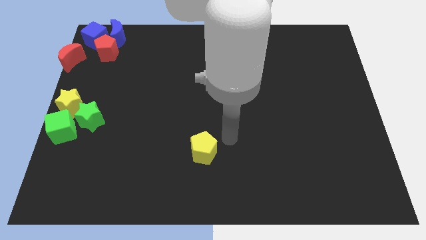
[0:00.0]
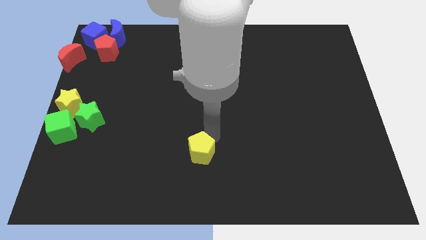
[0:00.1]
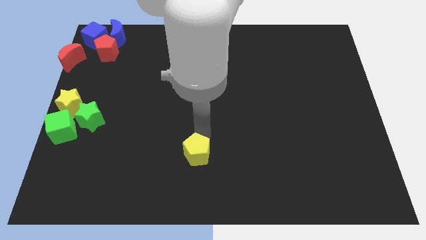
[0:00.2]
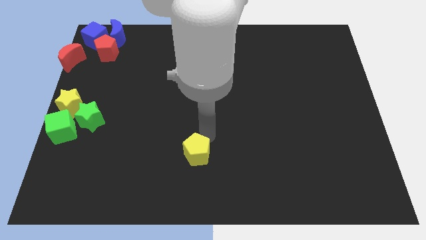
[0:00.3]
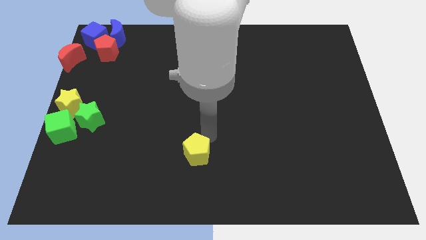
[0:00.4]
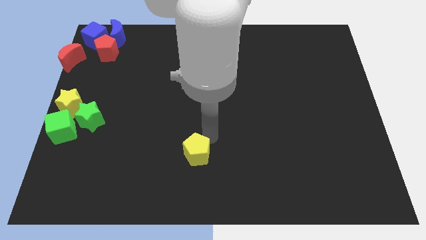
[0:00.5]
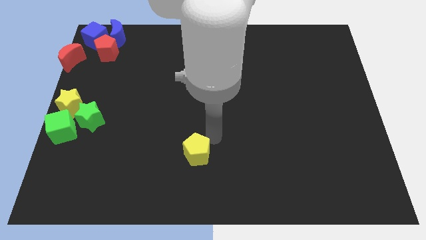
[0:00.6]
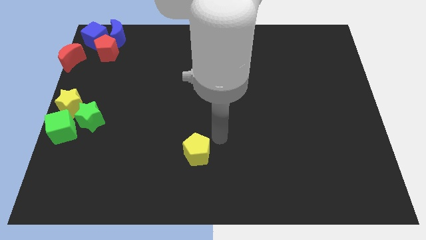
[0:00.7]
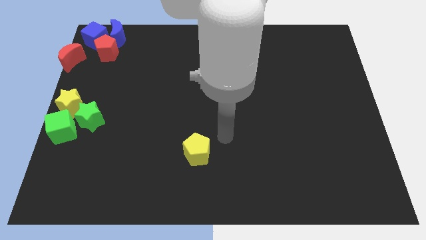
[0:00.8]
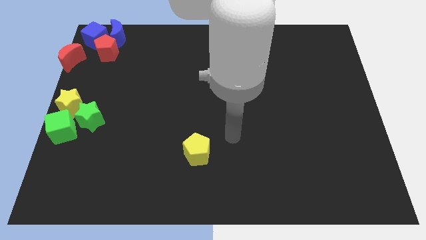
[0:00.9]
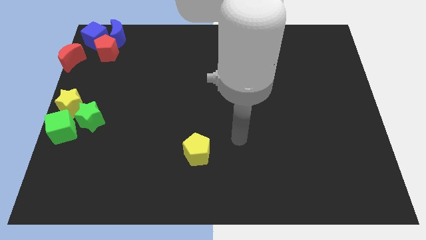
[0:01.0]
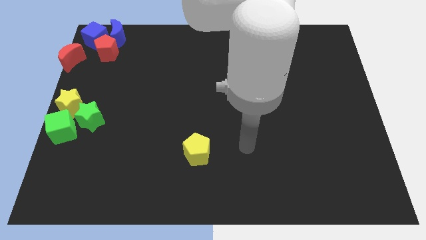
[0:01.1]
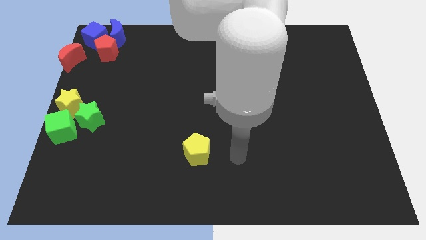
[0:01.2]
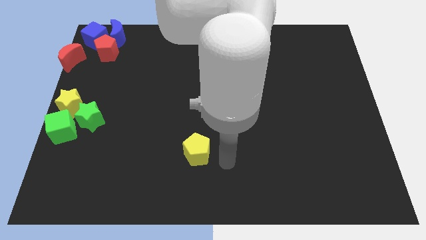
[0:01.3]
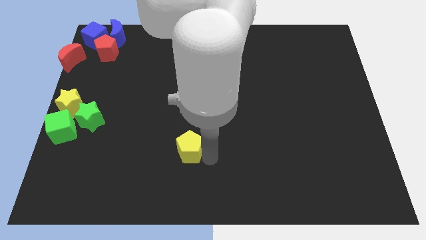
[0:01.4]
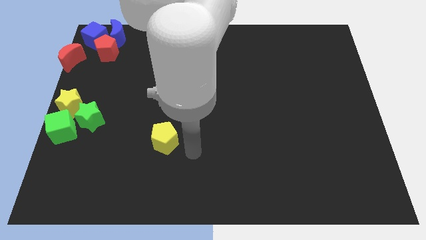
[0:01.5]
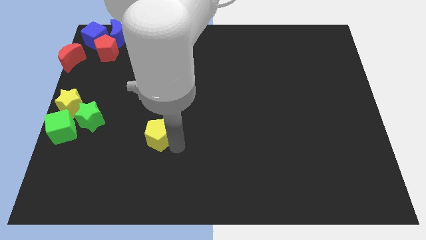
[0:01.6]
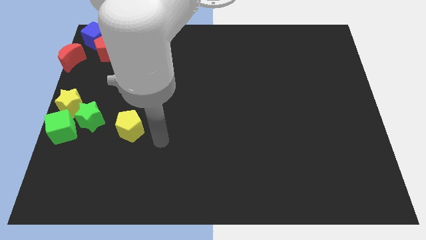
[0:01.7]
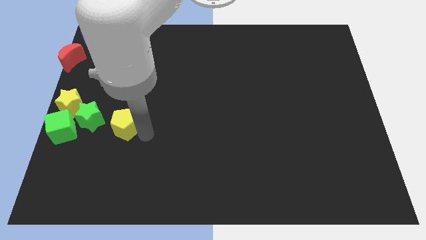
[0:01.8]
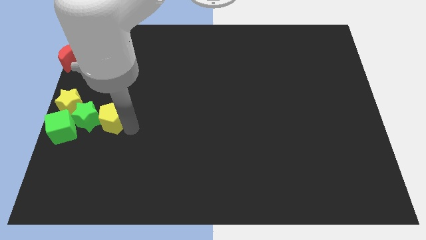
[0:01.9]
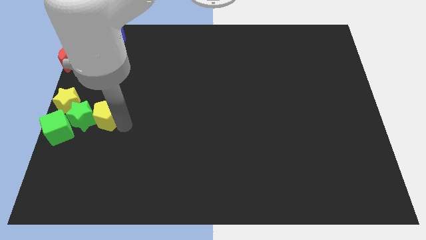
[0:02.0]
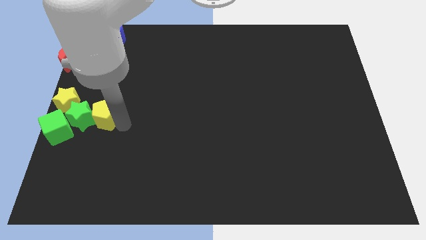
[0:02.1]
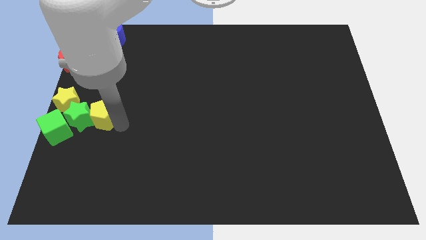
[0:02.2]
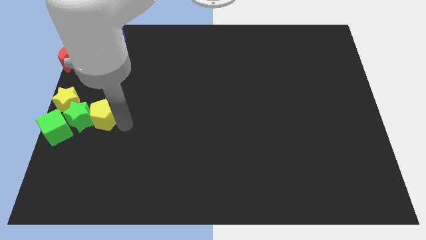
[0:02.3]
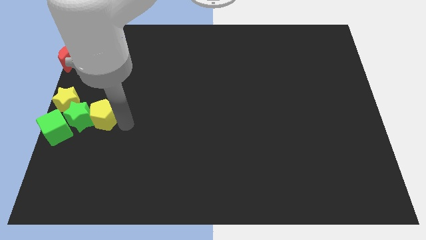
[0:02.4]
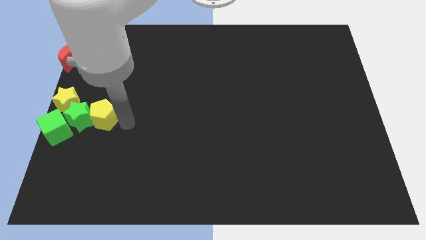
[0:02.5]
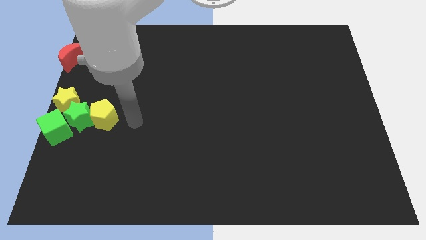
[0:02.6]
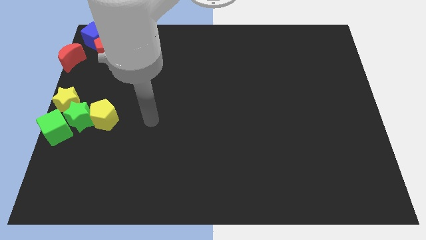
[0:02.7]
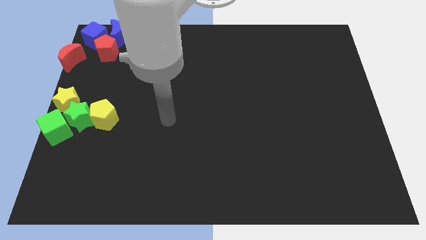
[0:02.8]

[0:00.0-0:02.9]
place yellow pentagon beside green star

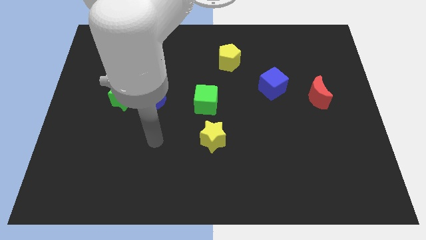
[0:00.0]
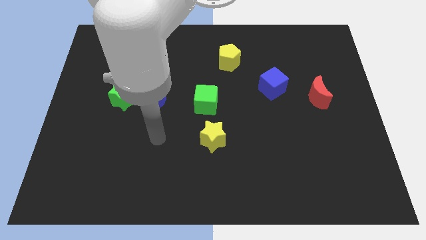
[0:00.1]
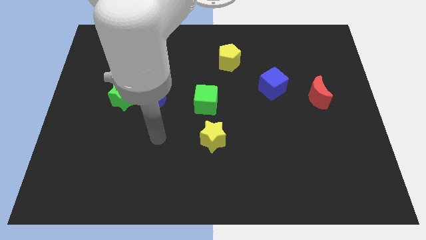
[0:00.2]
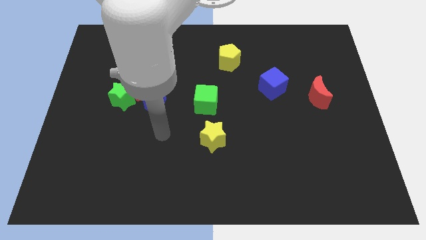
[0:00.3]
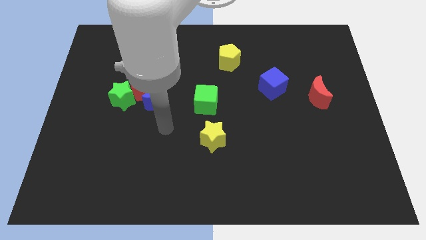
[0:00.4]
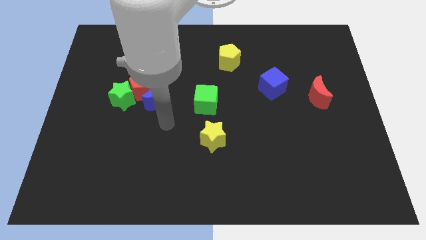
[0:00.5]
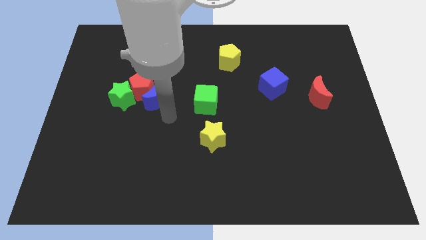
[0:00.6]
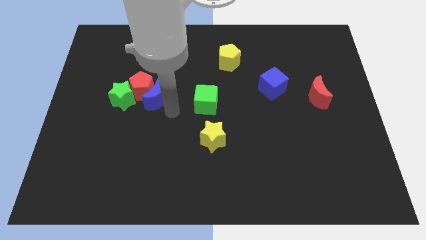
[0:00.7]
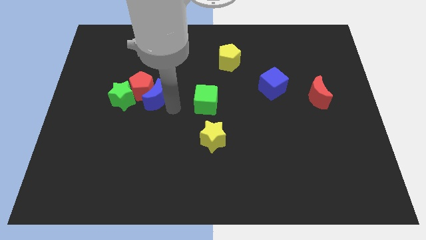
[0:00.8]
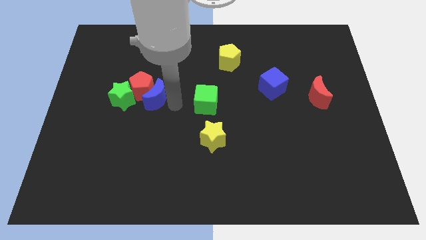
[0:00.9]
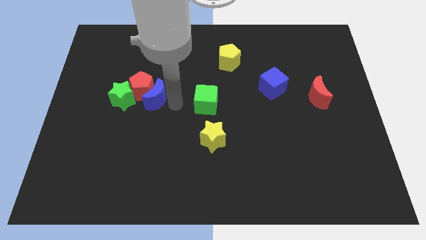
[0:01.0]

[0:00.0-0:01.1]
place your arm to the left of the green cube

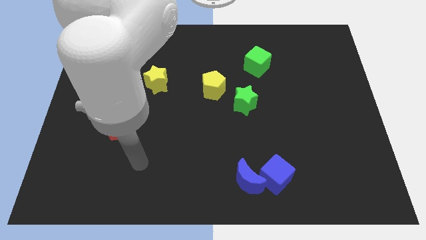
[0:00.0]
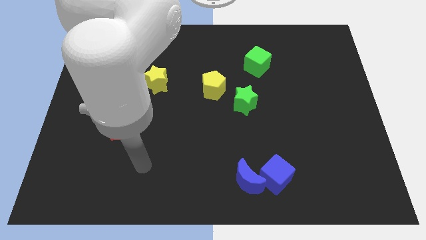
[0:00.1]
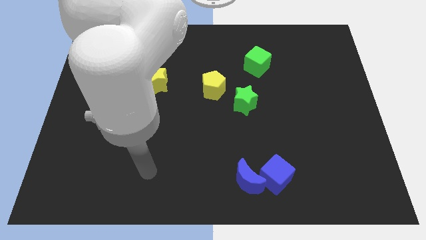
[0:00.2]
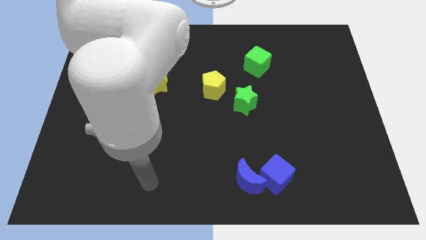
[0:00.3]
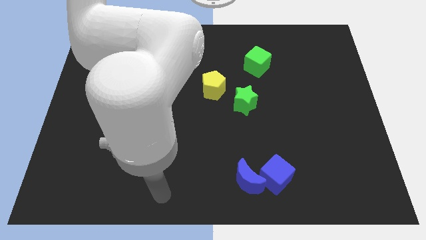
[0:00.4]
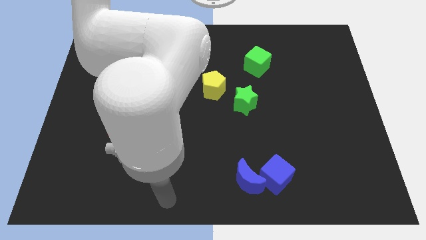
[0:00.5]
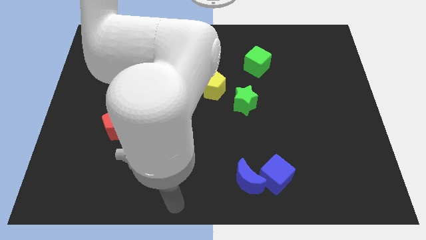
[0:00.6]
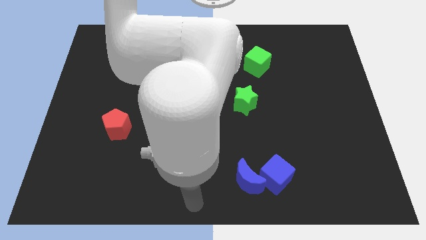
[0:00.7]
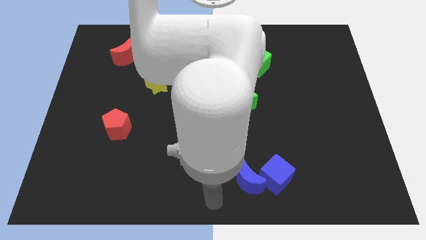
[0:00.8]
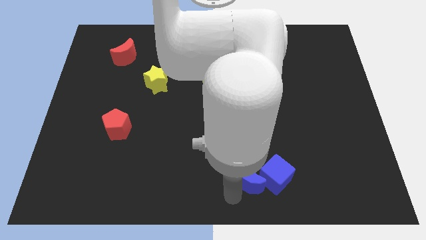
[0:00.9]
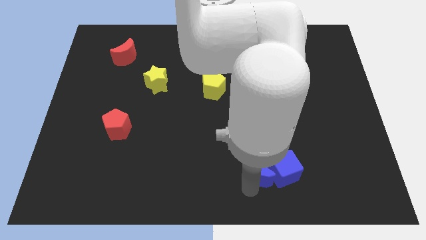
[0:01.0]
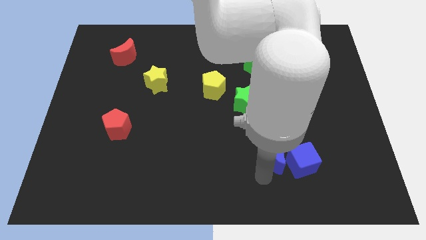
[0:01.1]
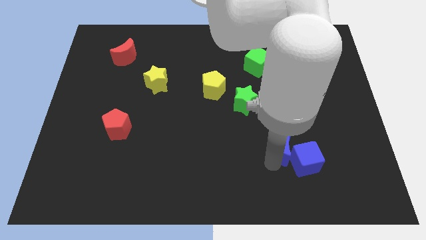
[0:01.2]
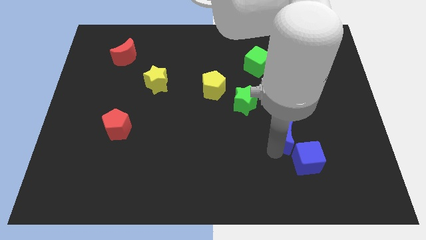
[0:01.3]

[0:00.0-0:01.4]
push the blue crescent slightly to the right of the board

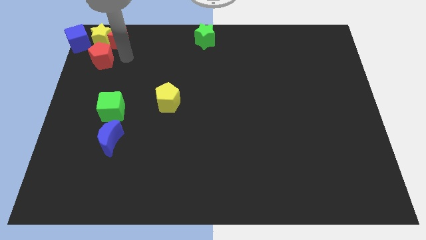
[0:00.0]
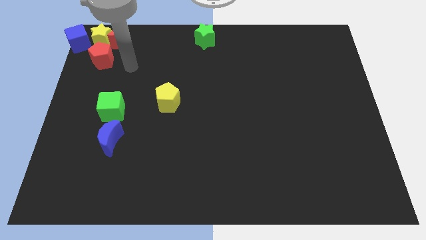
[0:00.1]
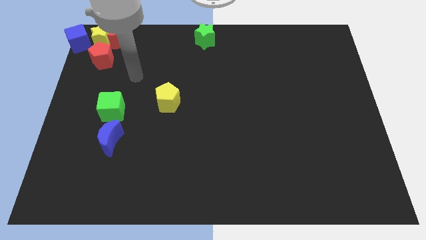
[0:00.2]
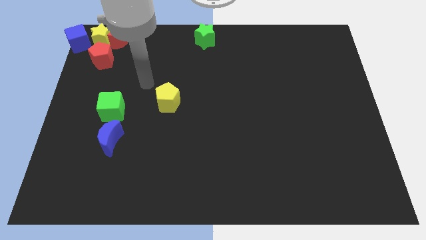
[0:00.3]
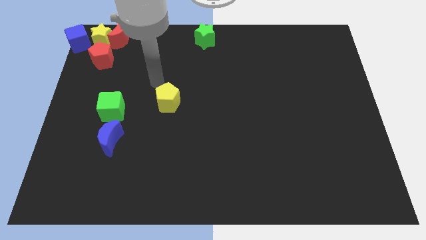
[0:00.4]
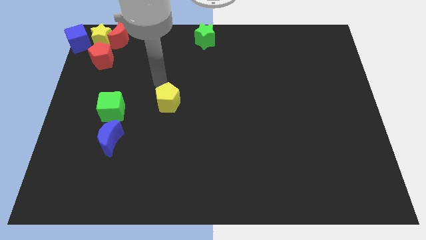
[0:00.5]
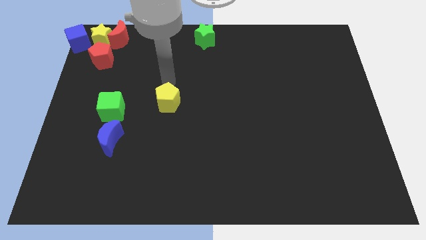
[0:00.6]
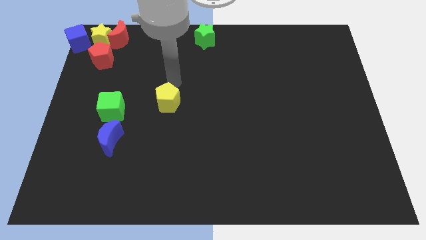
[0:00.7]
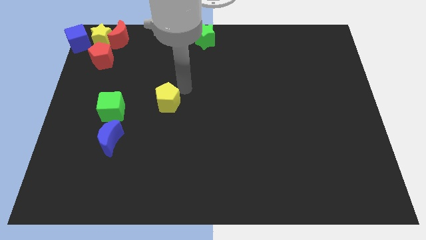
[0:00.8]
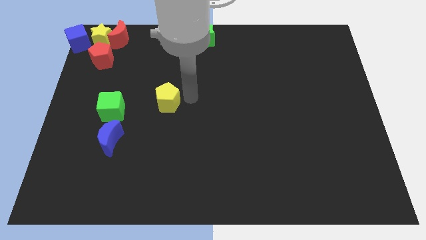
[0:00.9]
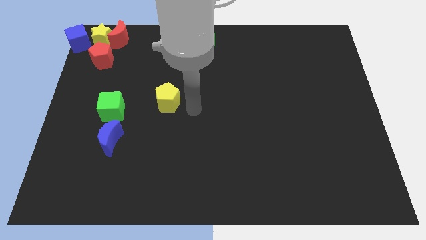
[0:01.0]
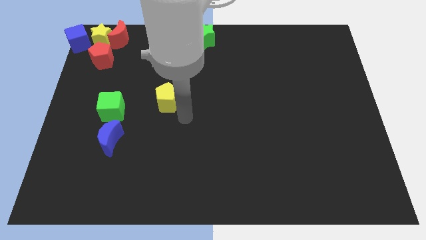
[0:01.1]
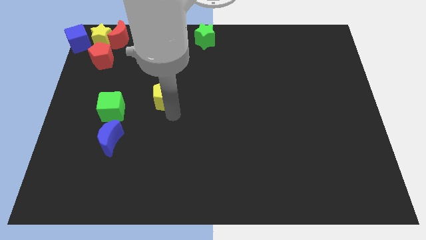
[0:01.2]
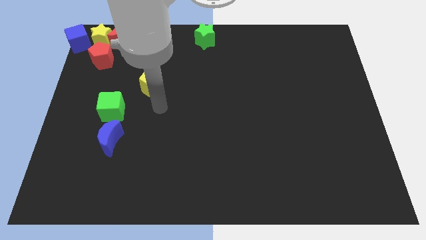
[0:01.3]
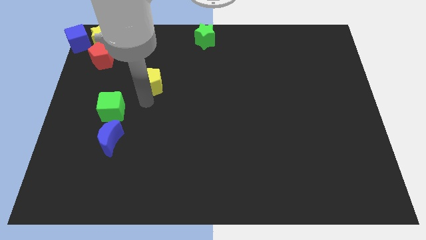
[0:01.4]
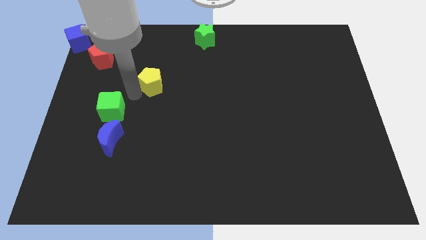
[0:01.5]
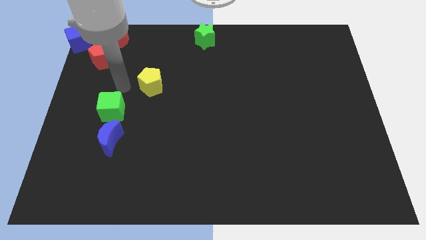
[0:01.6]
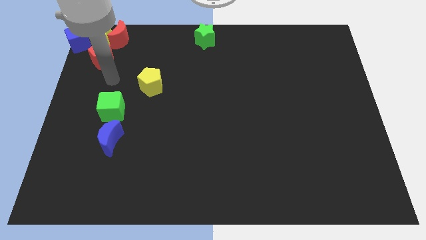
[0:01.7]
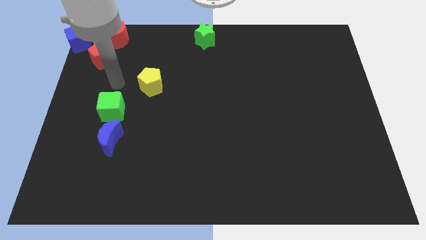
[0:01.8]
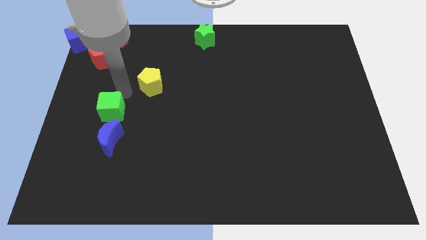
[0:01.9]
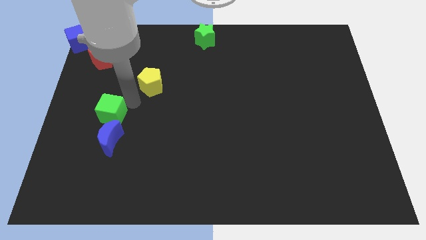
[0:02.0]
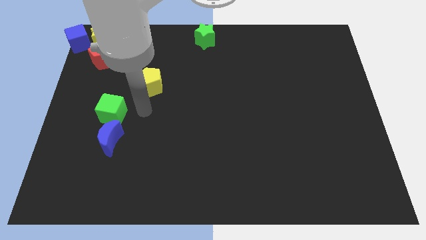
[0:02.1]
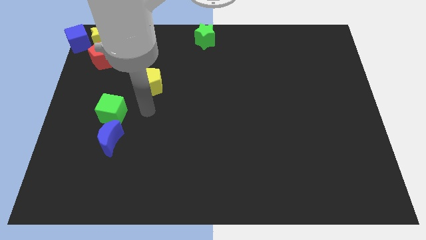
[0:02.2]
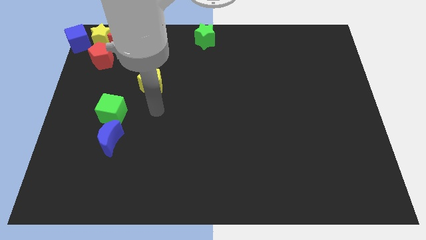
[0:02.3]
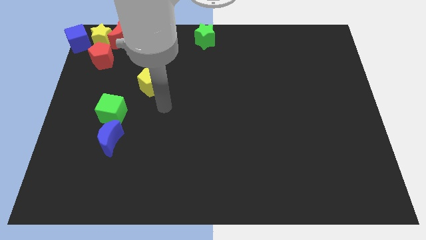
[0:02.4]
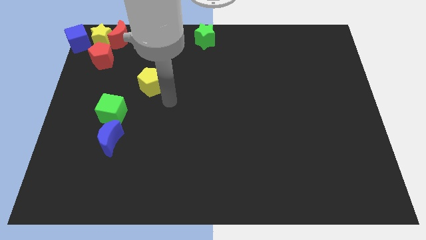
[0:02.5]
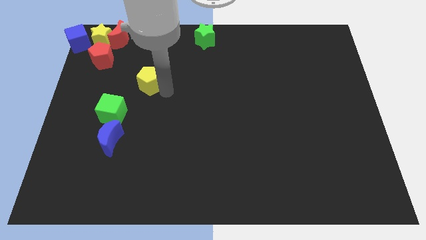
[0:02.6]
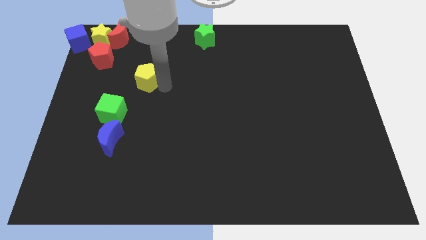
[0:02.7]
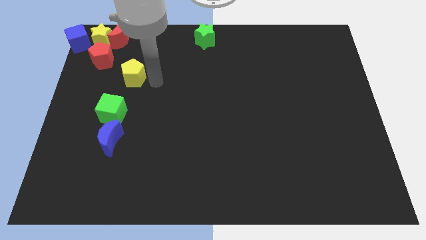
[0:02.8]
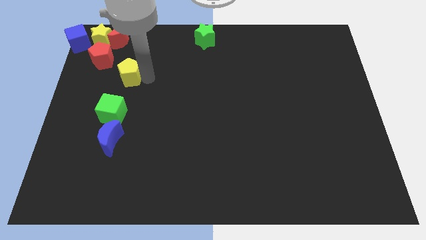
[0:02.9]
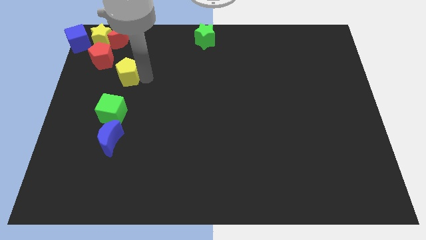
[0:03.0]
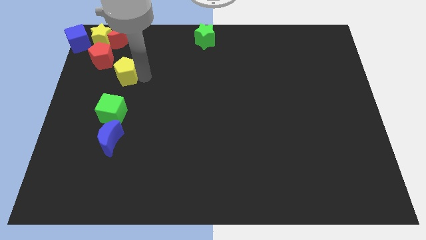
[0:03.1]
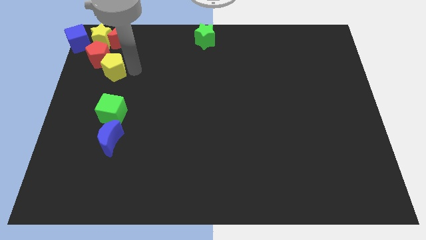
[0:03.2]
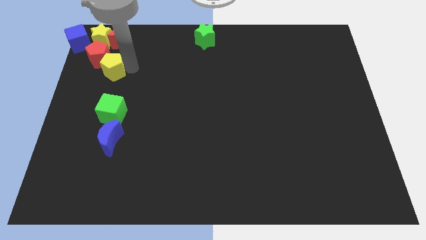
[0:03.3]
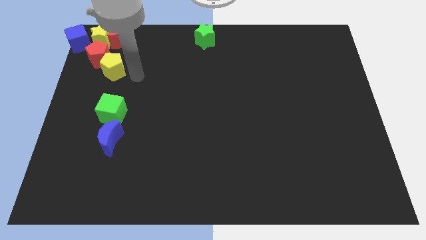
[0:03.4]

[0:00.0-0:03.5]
push the yellow pentagon into the red pentagon

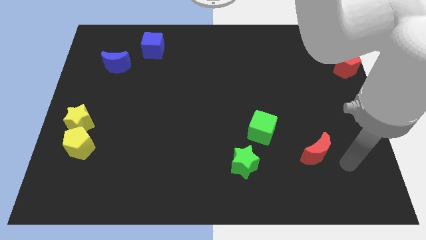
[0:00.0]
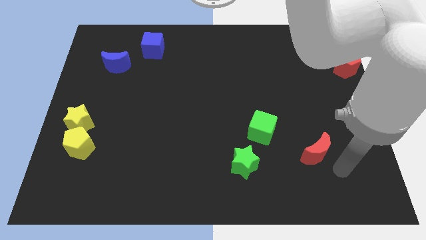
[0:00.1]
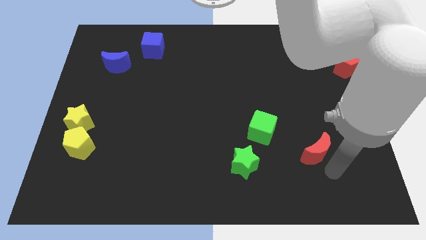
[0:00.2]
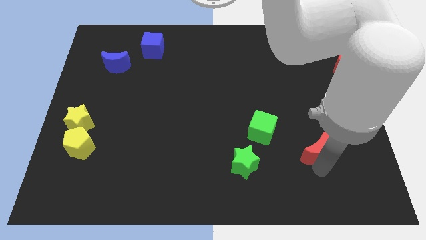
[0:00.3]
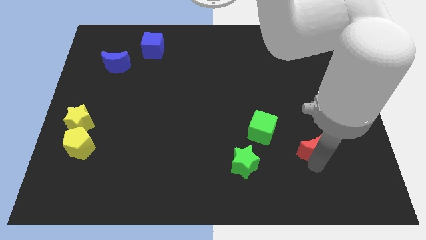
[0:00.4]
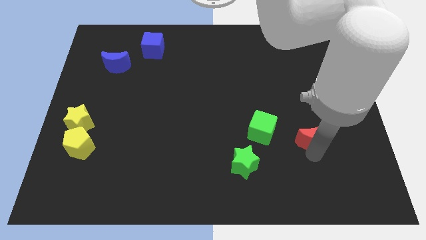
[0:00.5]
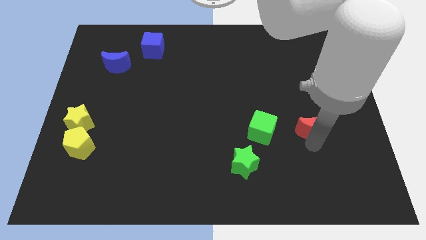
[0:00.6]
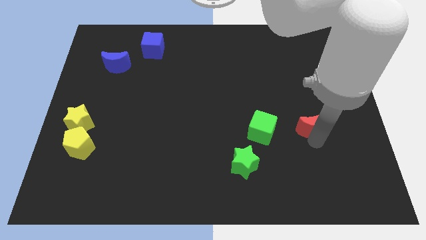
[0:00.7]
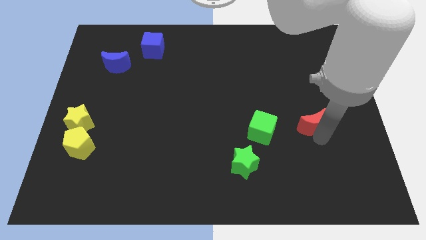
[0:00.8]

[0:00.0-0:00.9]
move the red crescent parallel to the green star
